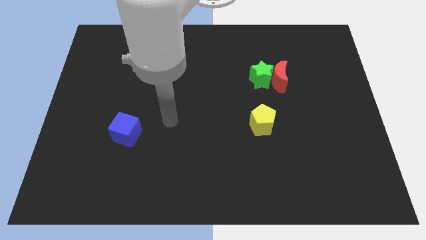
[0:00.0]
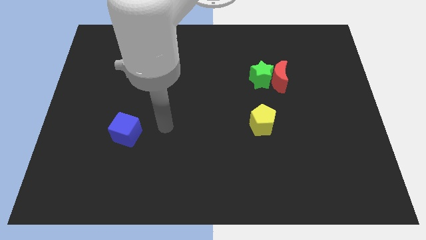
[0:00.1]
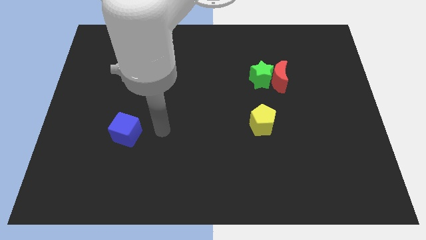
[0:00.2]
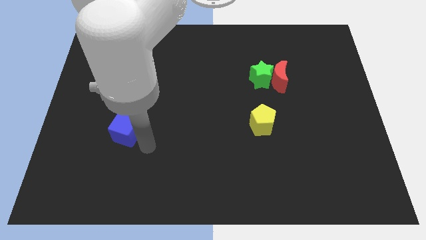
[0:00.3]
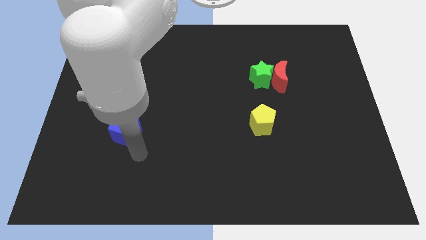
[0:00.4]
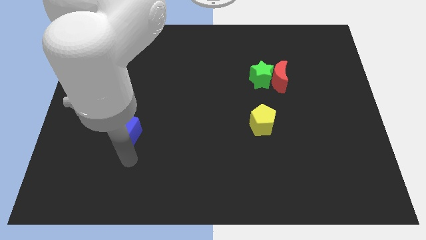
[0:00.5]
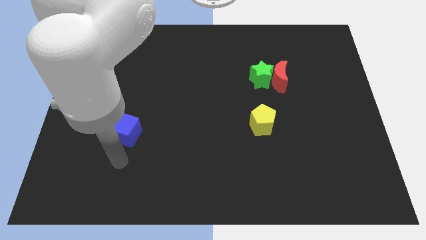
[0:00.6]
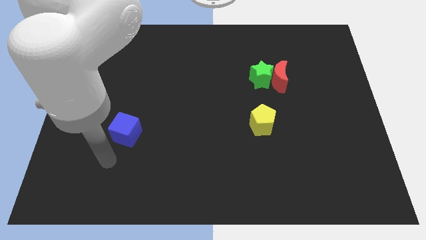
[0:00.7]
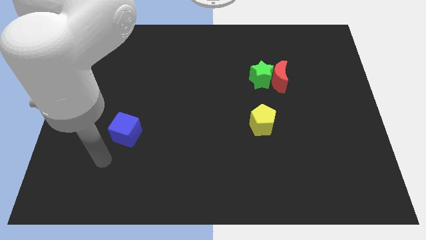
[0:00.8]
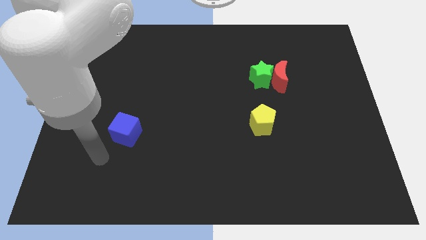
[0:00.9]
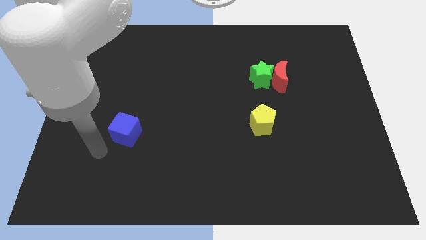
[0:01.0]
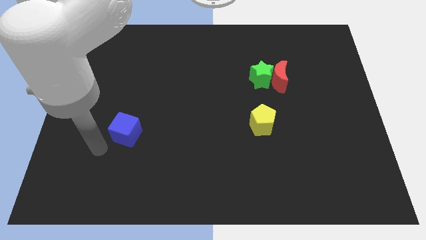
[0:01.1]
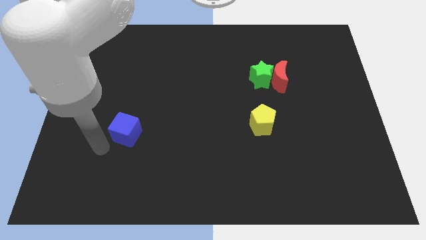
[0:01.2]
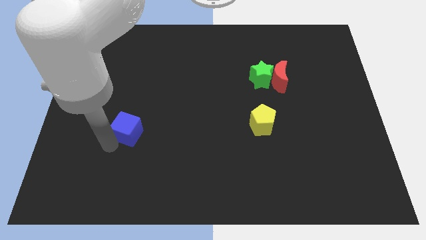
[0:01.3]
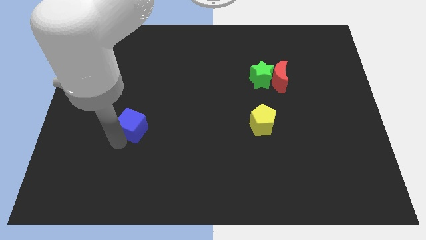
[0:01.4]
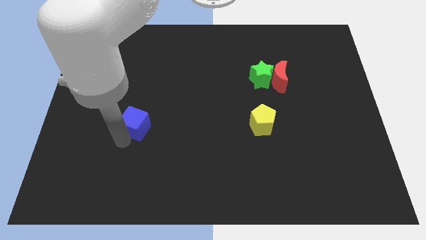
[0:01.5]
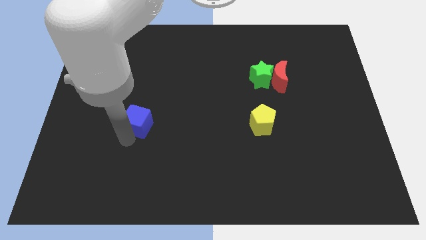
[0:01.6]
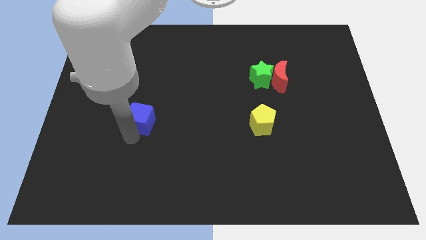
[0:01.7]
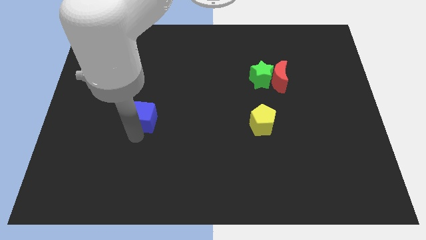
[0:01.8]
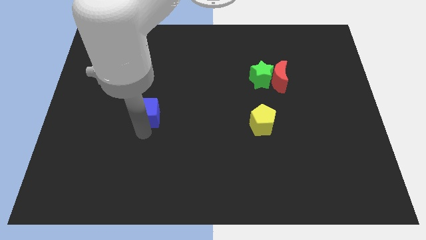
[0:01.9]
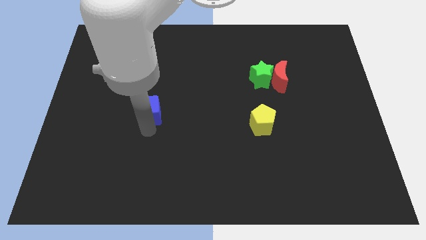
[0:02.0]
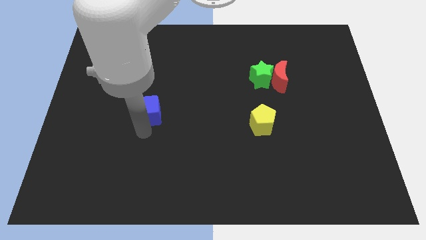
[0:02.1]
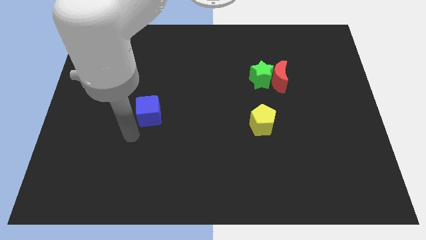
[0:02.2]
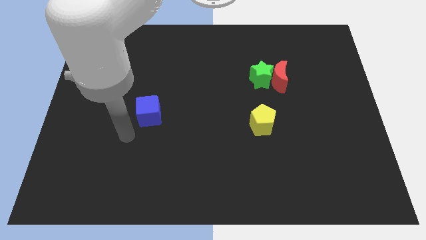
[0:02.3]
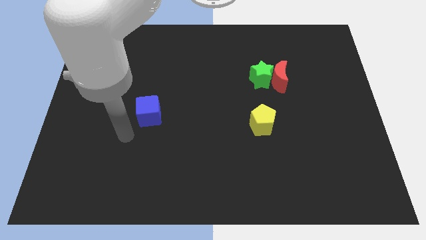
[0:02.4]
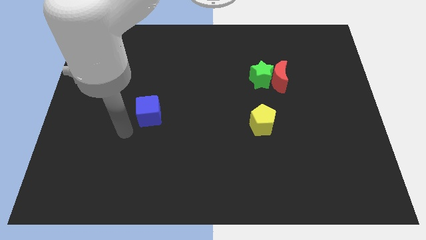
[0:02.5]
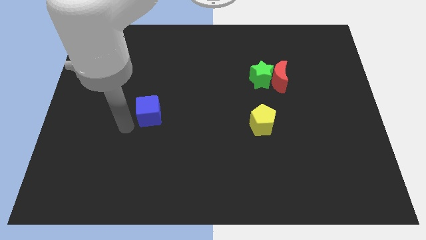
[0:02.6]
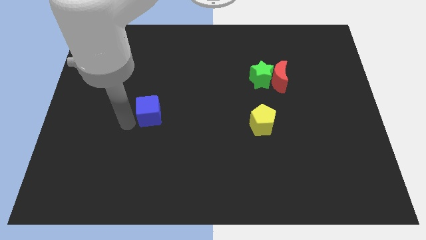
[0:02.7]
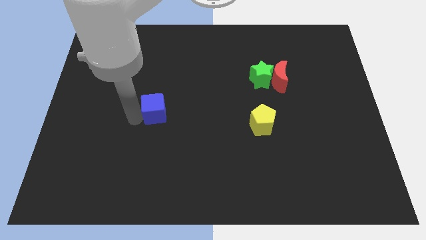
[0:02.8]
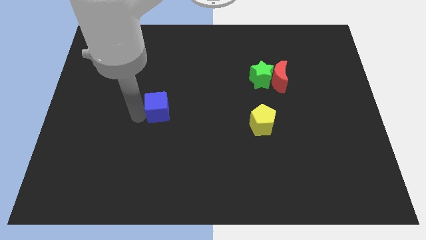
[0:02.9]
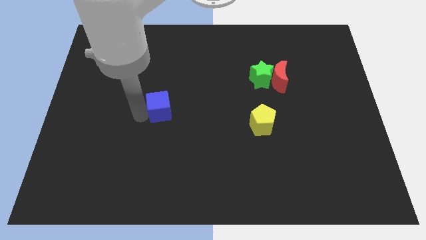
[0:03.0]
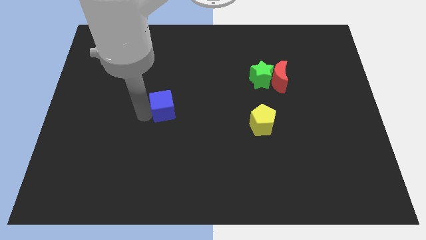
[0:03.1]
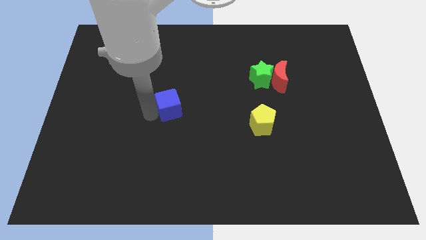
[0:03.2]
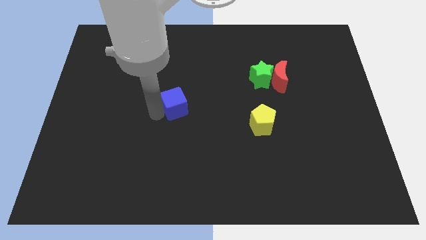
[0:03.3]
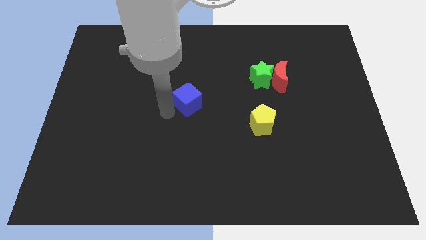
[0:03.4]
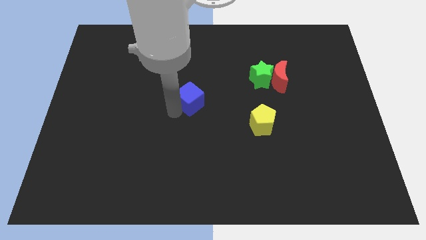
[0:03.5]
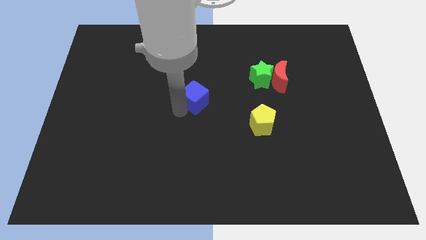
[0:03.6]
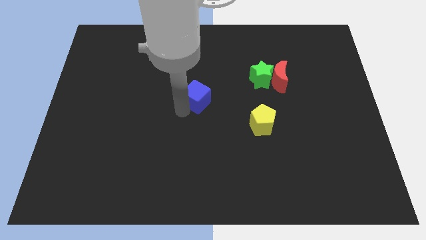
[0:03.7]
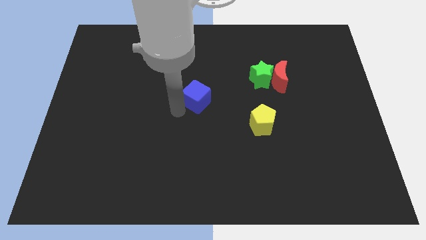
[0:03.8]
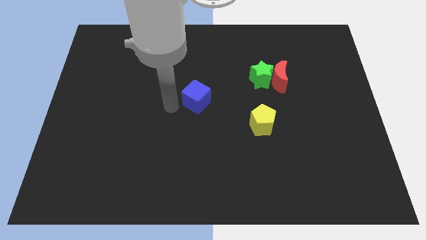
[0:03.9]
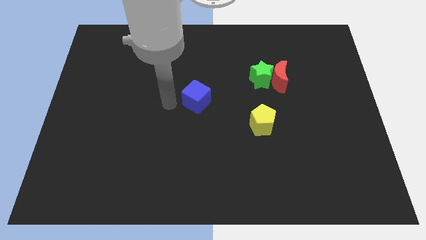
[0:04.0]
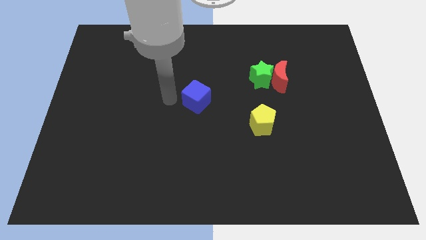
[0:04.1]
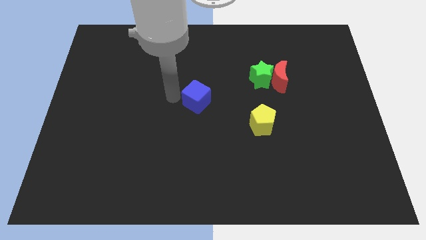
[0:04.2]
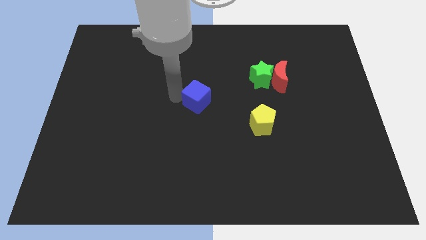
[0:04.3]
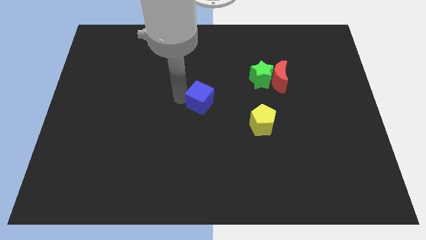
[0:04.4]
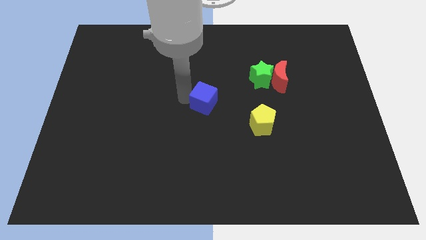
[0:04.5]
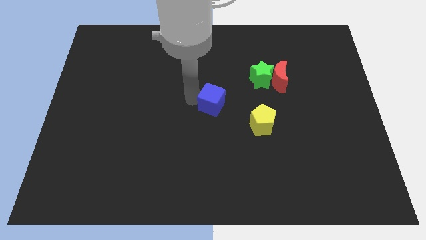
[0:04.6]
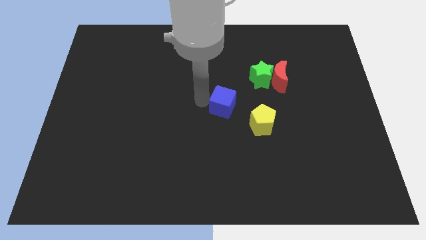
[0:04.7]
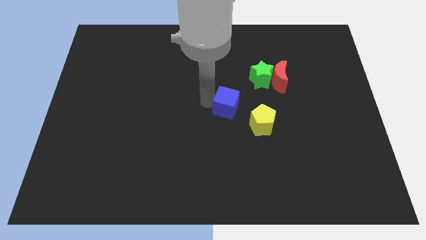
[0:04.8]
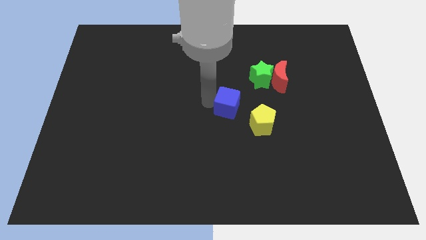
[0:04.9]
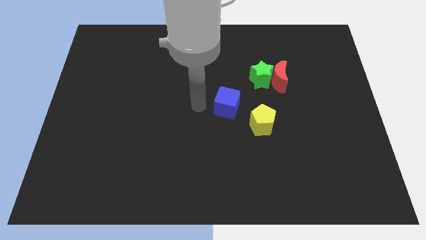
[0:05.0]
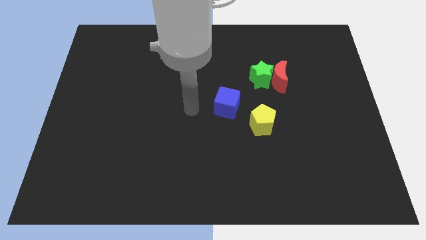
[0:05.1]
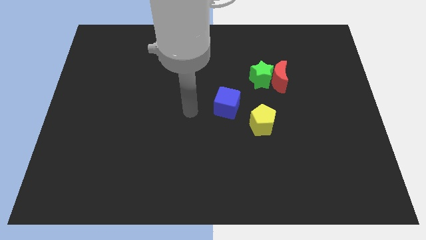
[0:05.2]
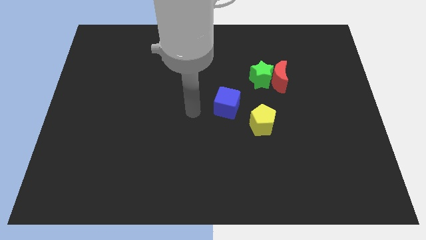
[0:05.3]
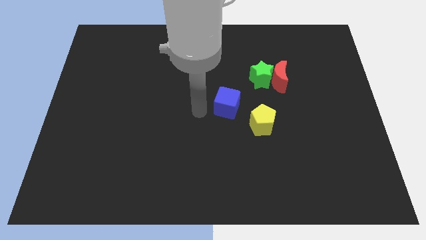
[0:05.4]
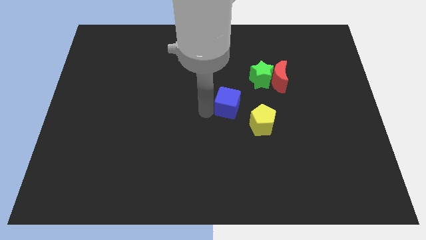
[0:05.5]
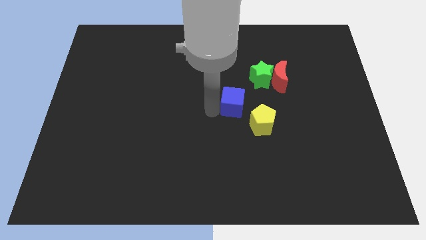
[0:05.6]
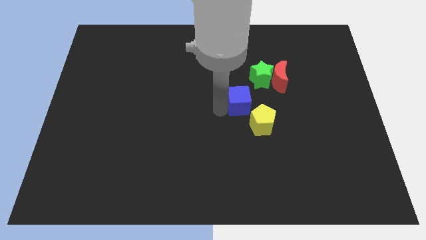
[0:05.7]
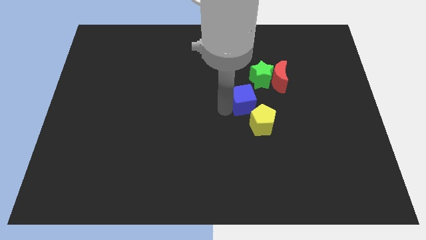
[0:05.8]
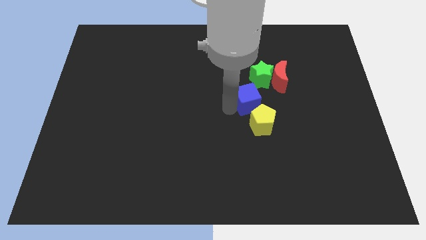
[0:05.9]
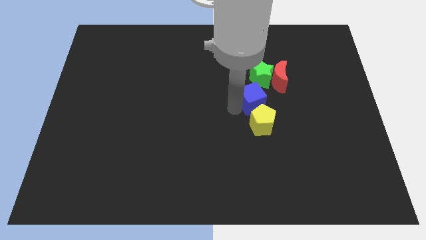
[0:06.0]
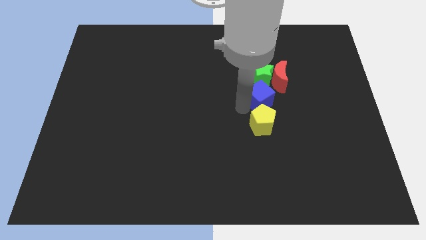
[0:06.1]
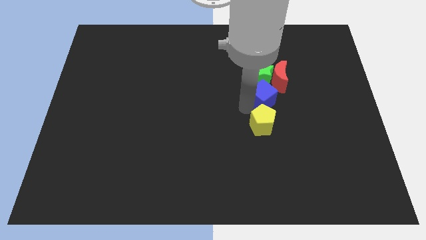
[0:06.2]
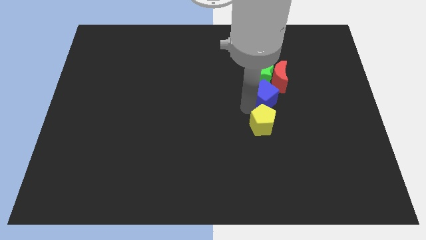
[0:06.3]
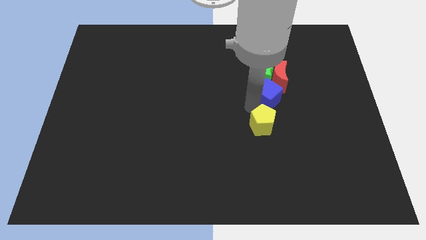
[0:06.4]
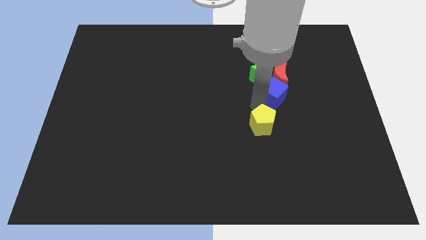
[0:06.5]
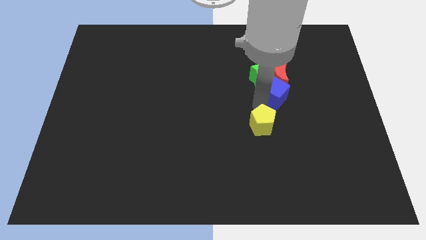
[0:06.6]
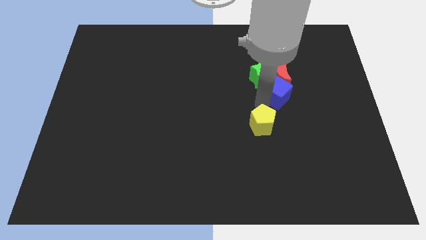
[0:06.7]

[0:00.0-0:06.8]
put the cube close to the red block

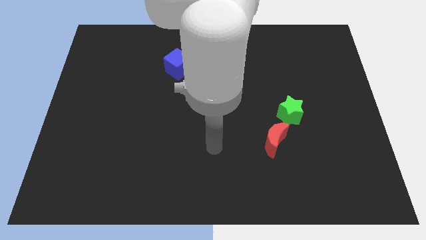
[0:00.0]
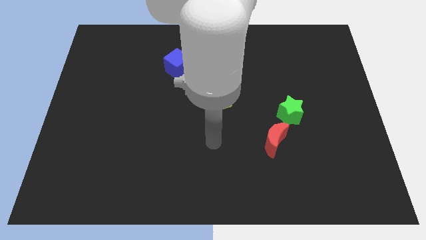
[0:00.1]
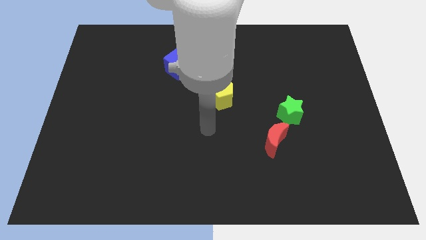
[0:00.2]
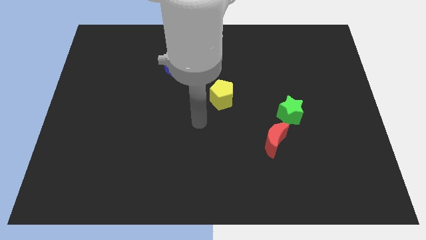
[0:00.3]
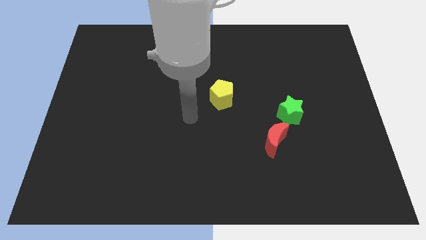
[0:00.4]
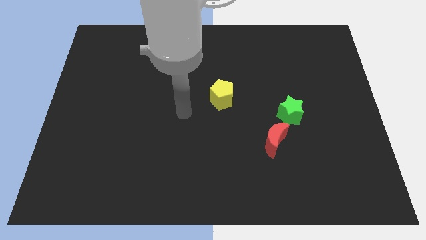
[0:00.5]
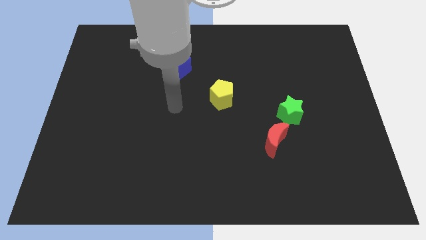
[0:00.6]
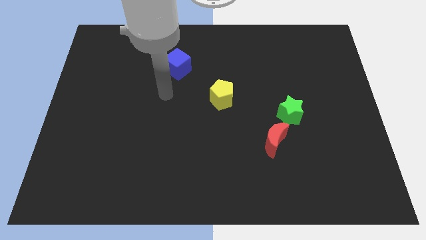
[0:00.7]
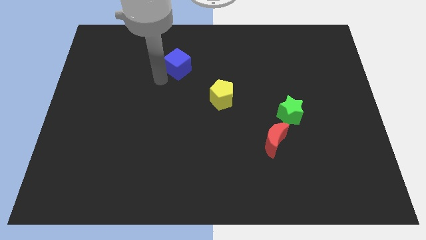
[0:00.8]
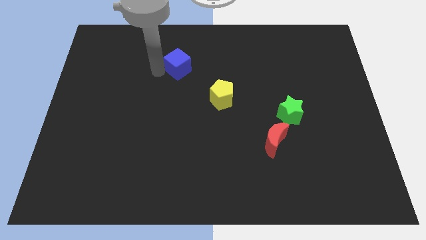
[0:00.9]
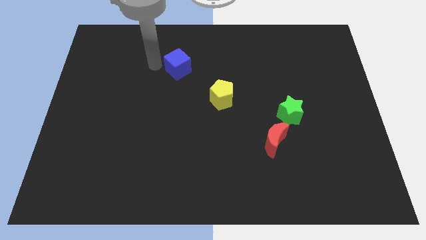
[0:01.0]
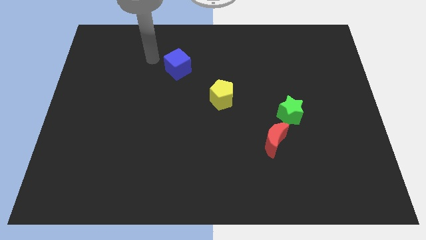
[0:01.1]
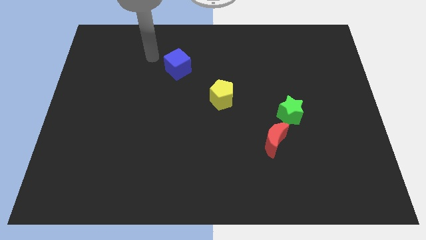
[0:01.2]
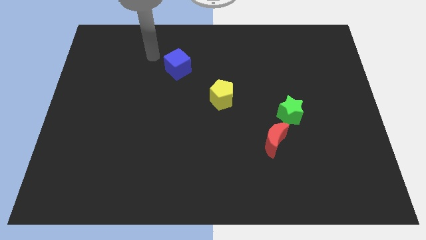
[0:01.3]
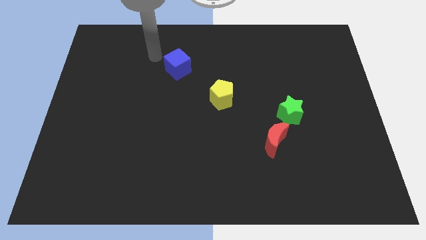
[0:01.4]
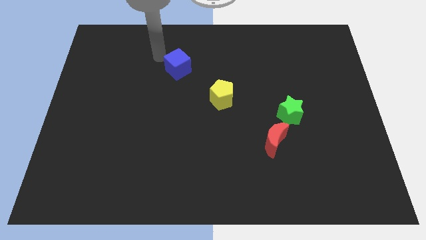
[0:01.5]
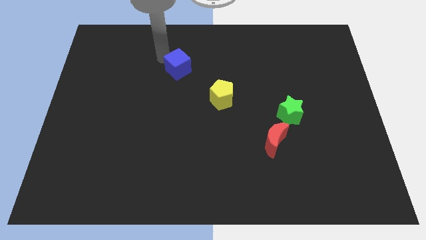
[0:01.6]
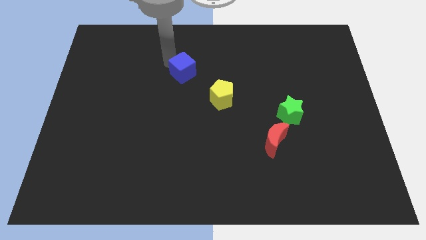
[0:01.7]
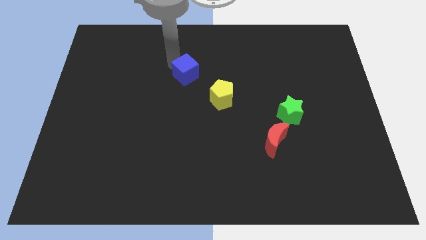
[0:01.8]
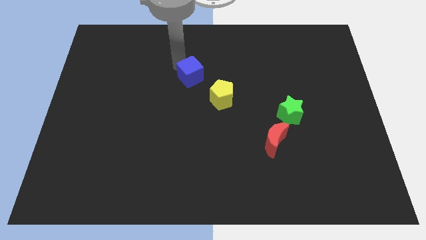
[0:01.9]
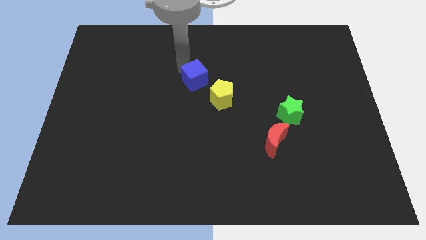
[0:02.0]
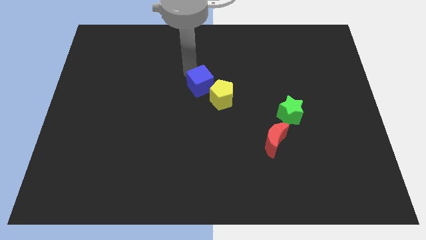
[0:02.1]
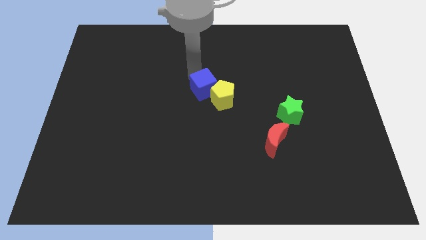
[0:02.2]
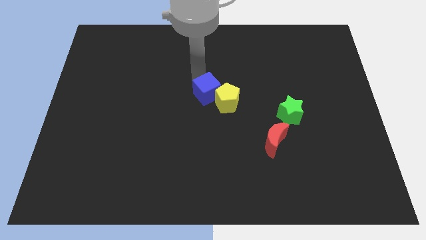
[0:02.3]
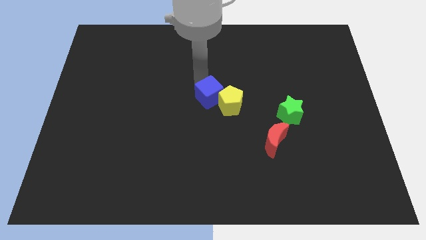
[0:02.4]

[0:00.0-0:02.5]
move the cube towards the yellow pentagon
